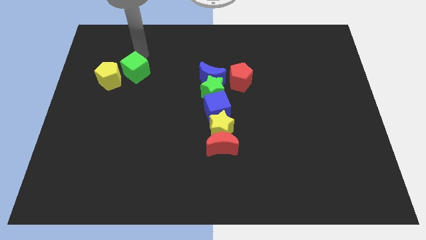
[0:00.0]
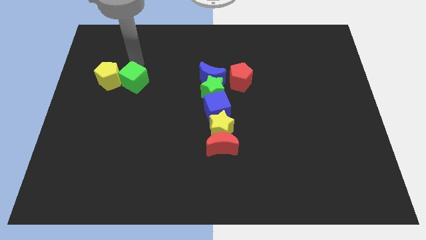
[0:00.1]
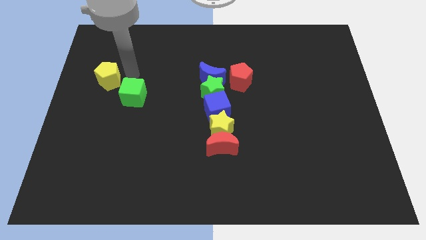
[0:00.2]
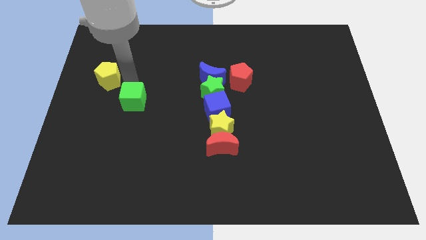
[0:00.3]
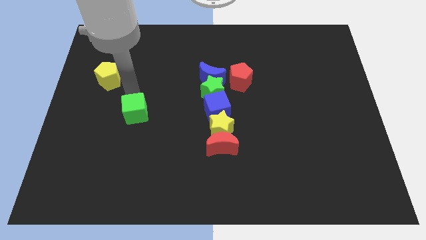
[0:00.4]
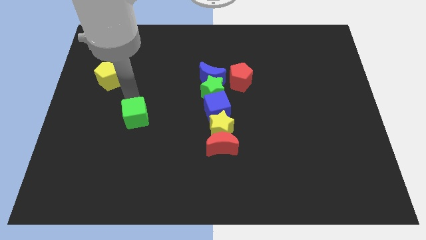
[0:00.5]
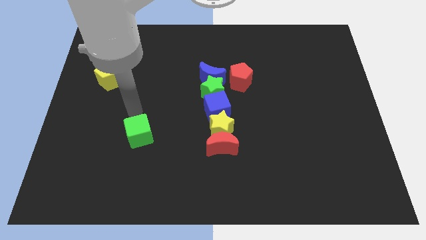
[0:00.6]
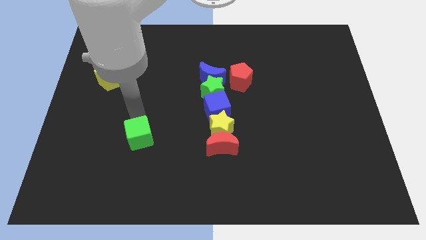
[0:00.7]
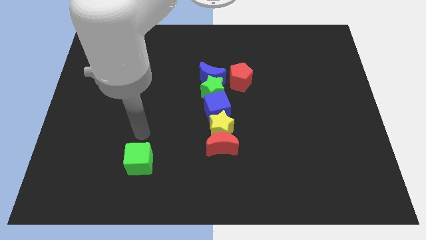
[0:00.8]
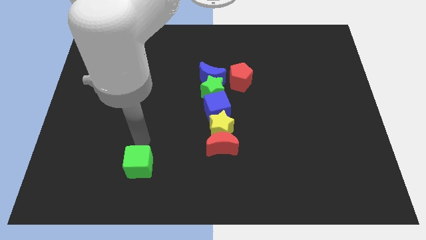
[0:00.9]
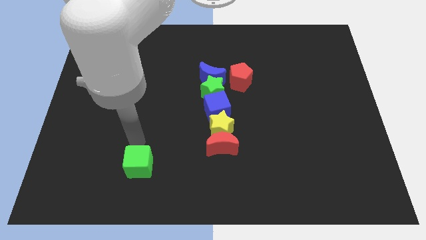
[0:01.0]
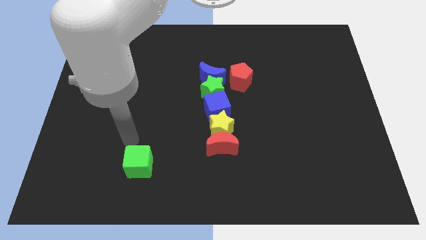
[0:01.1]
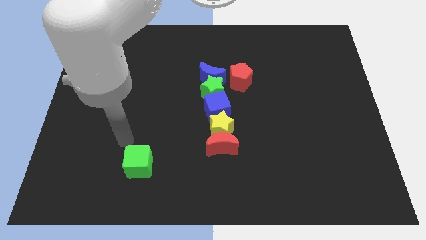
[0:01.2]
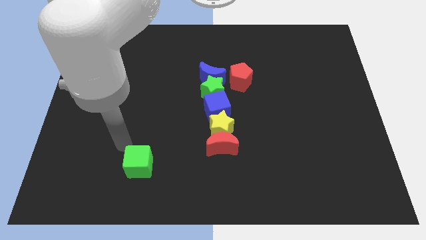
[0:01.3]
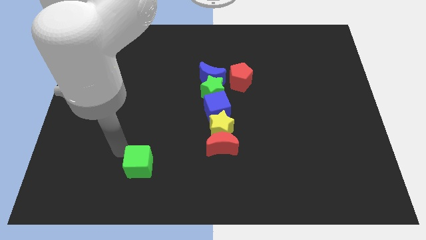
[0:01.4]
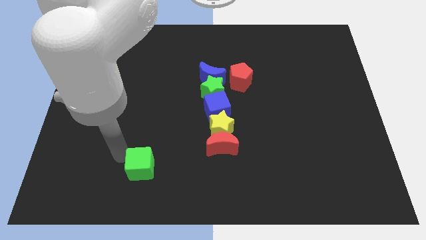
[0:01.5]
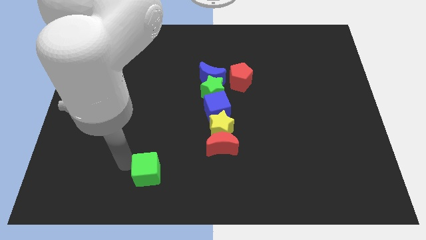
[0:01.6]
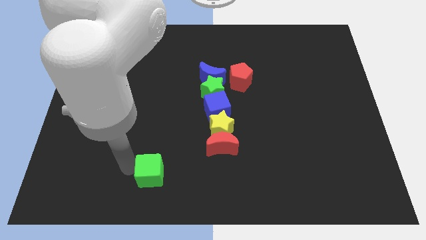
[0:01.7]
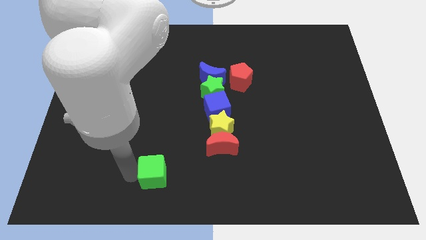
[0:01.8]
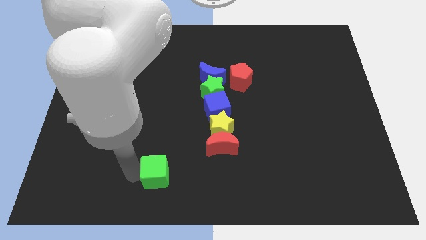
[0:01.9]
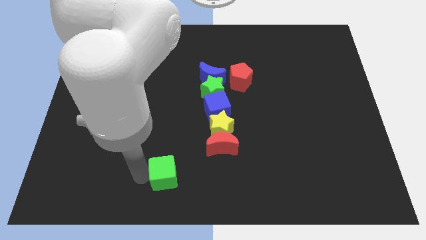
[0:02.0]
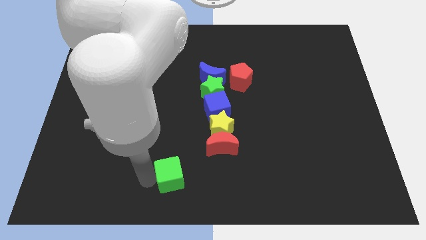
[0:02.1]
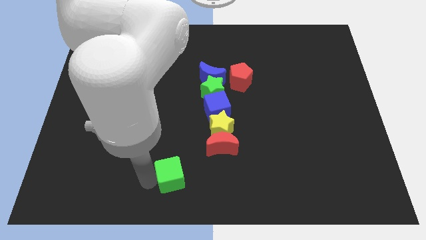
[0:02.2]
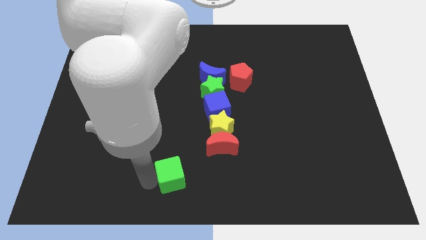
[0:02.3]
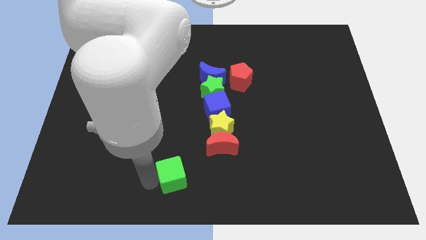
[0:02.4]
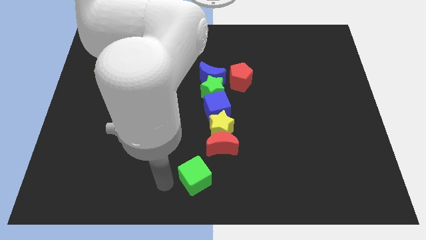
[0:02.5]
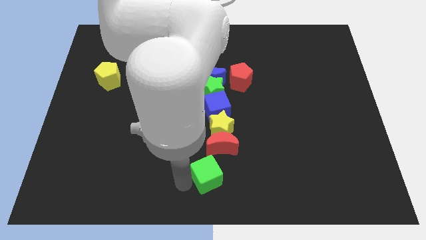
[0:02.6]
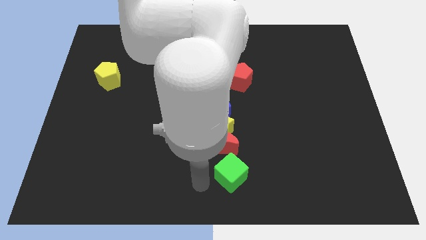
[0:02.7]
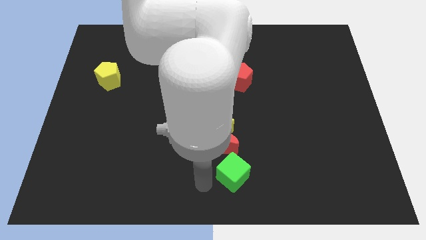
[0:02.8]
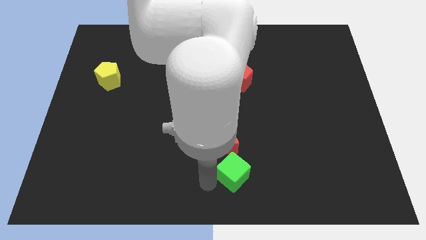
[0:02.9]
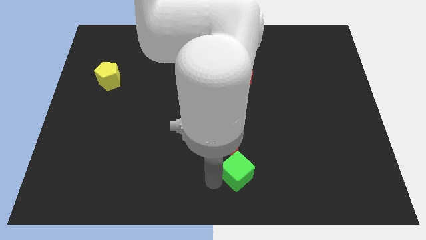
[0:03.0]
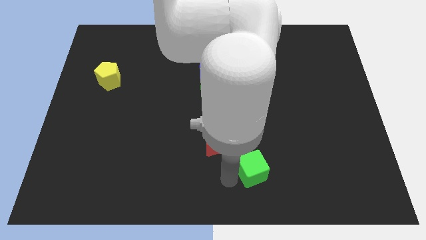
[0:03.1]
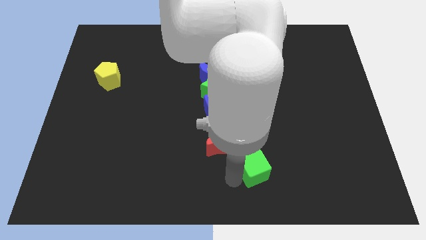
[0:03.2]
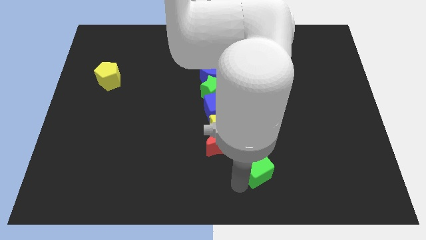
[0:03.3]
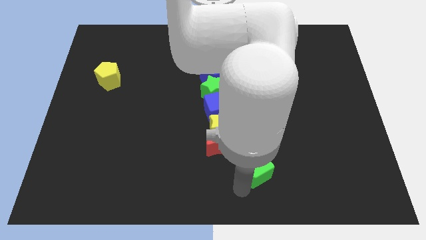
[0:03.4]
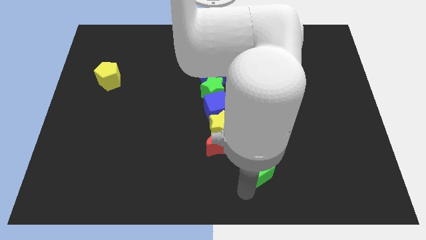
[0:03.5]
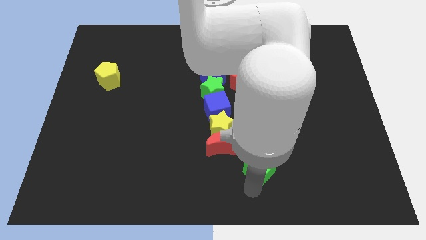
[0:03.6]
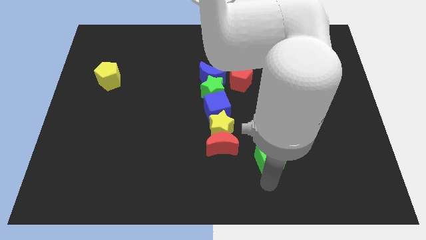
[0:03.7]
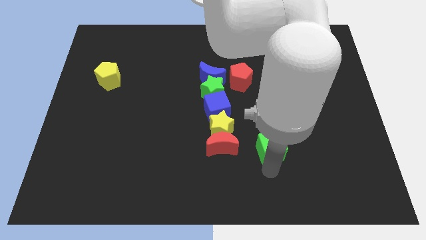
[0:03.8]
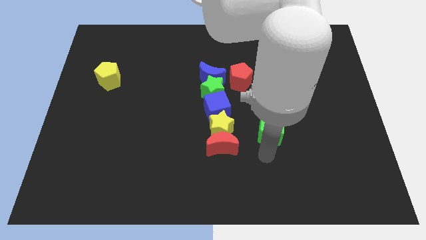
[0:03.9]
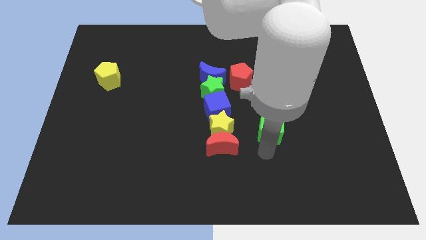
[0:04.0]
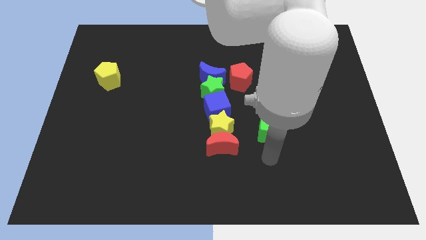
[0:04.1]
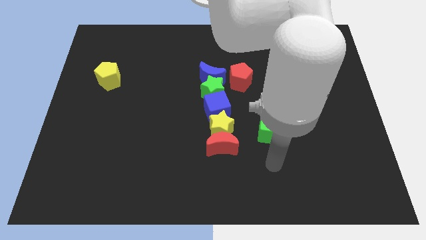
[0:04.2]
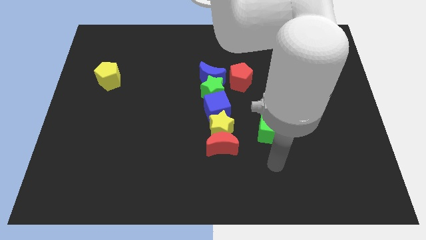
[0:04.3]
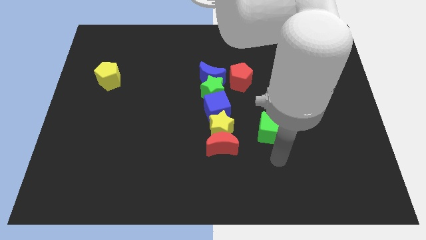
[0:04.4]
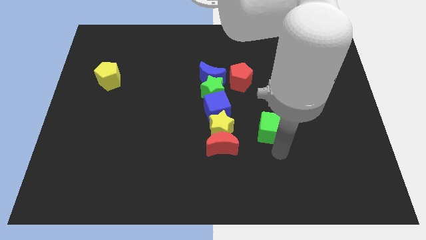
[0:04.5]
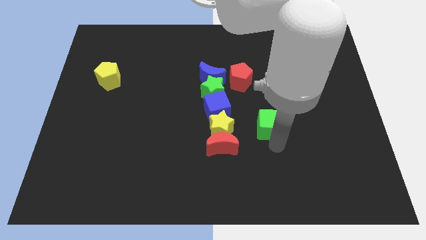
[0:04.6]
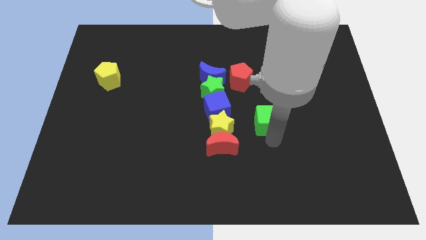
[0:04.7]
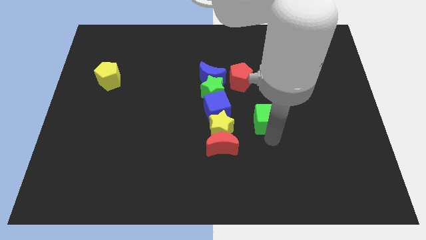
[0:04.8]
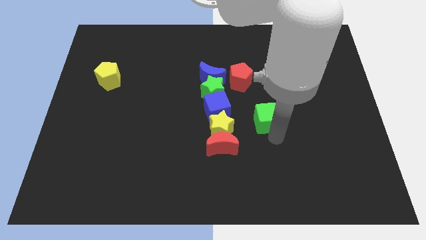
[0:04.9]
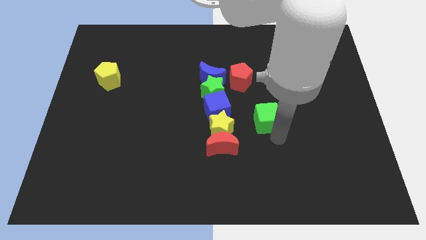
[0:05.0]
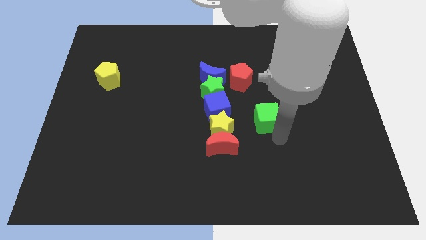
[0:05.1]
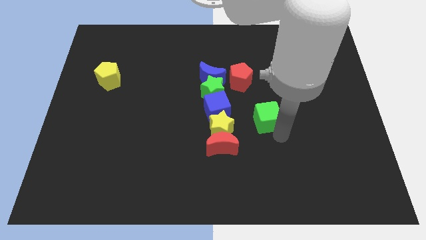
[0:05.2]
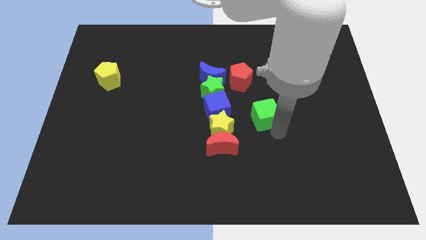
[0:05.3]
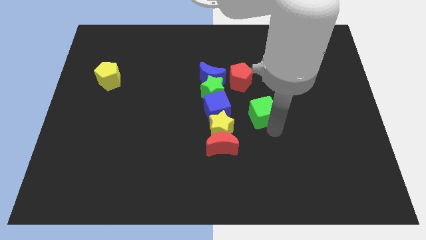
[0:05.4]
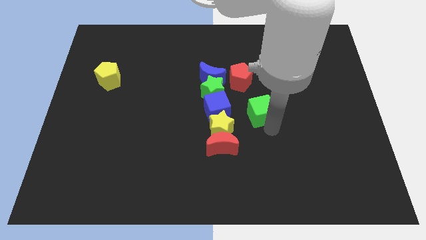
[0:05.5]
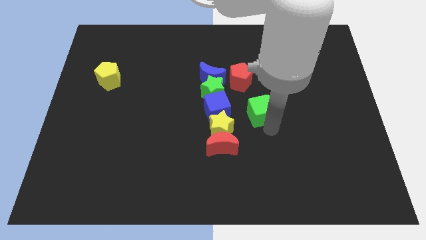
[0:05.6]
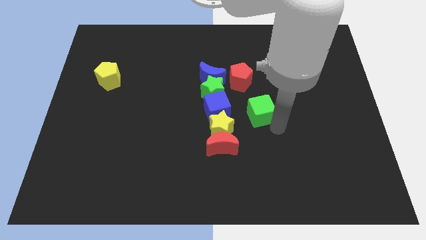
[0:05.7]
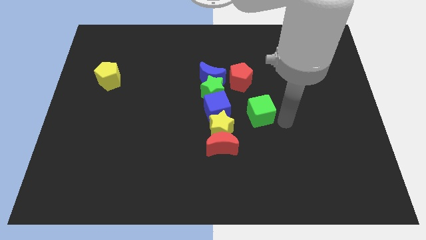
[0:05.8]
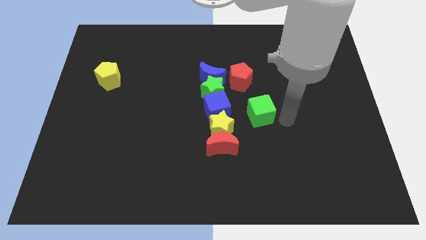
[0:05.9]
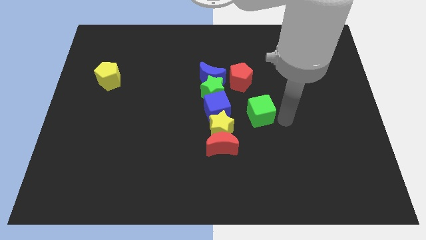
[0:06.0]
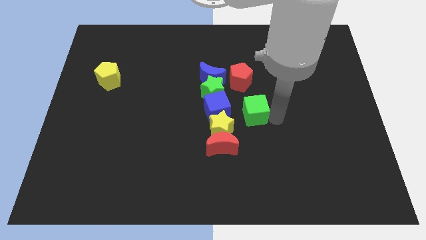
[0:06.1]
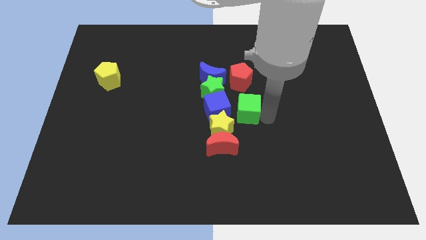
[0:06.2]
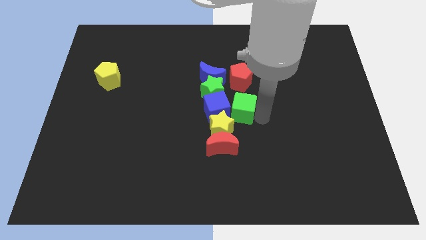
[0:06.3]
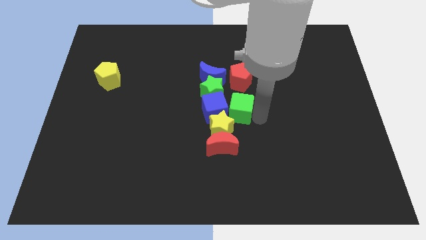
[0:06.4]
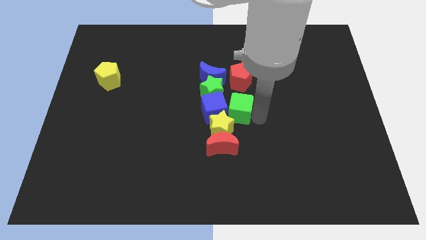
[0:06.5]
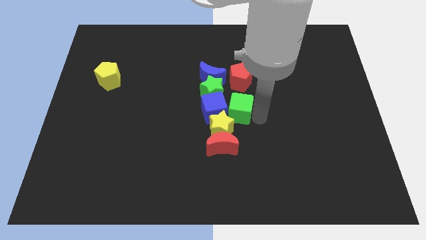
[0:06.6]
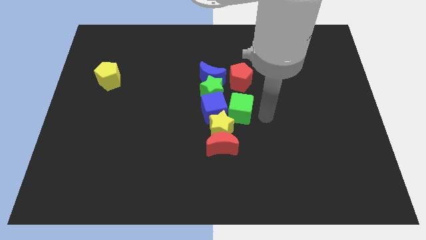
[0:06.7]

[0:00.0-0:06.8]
push the green cube into the right of the blue cube

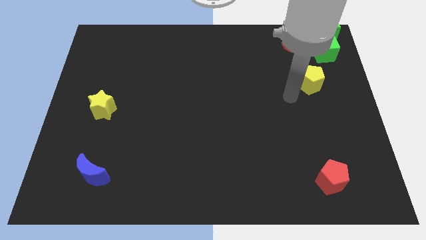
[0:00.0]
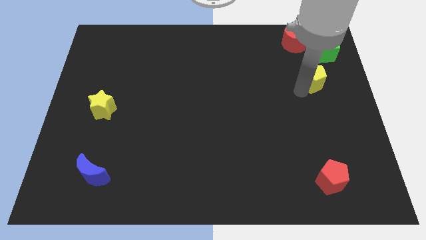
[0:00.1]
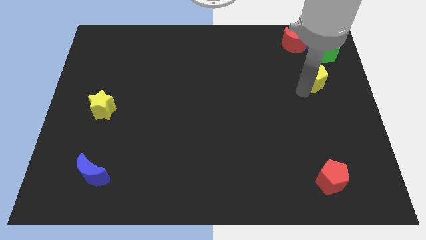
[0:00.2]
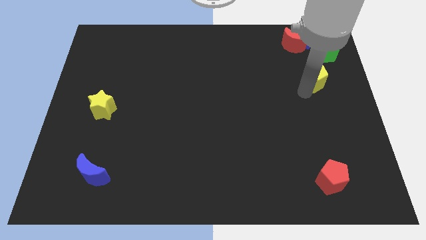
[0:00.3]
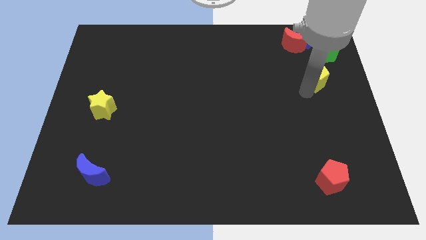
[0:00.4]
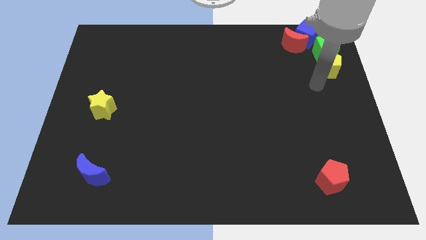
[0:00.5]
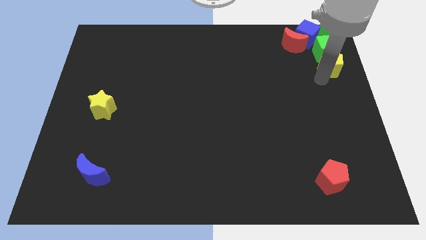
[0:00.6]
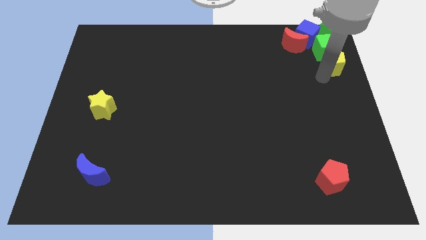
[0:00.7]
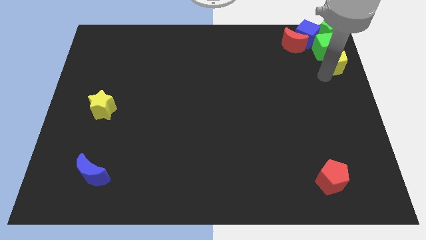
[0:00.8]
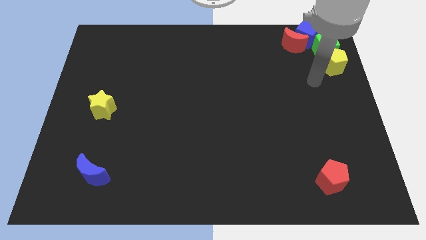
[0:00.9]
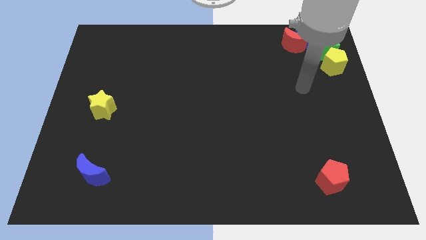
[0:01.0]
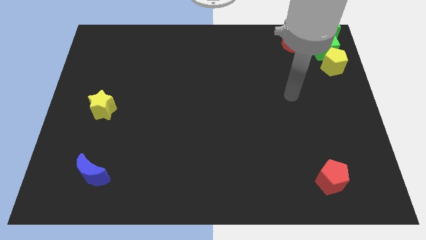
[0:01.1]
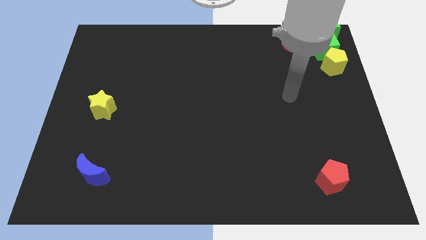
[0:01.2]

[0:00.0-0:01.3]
place the yellow pentagon below the green cube

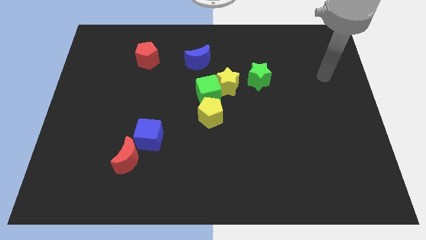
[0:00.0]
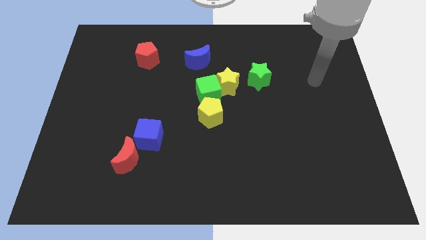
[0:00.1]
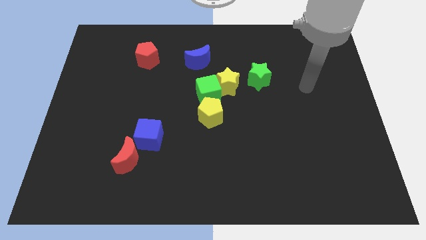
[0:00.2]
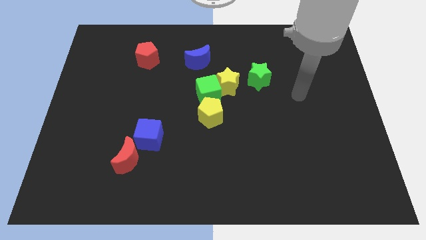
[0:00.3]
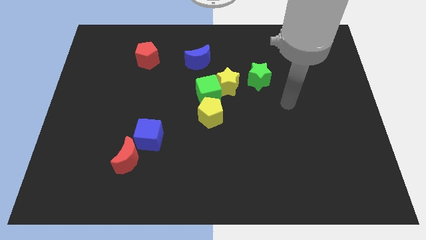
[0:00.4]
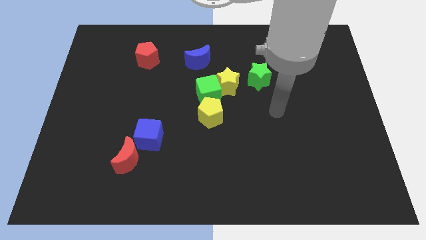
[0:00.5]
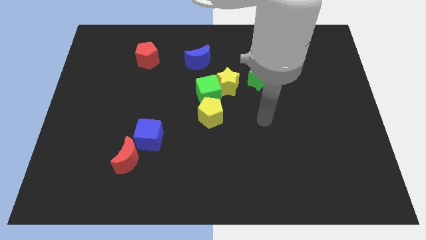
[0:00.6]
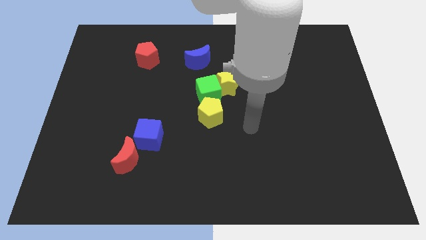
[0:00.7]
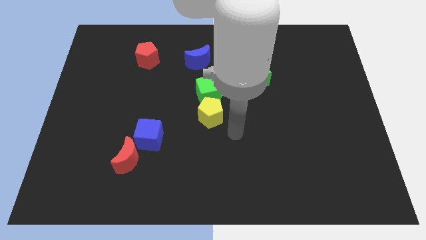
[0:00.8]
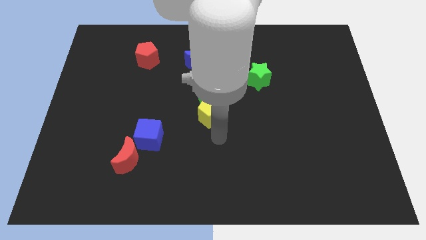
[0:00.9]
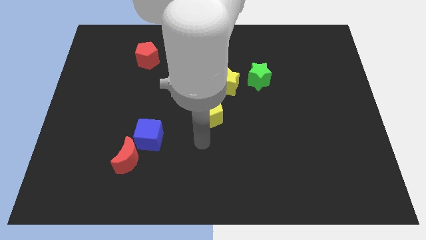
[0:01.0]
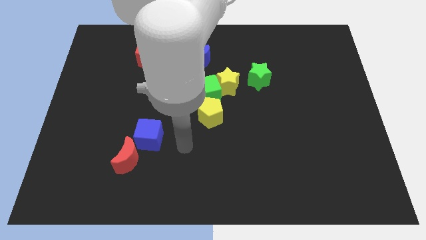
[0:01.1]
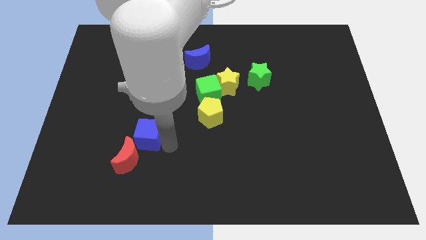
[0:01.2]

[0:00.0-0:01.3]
point your arm towards the bottom right side of the blue cube
